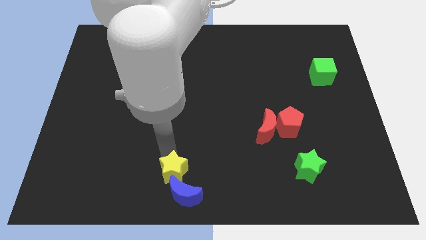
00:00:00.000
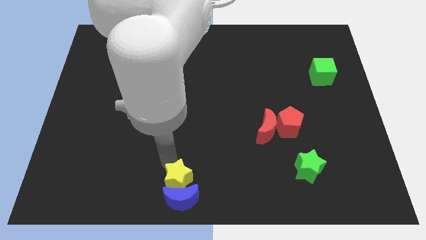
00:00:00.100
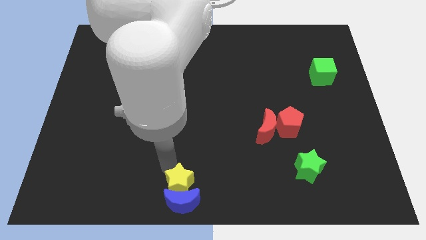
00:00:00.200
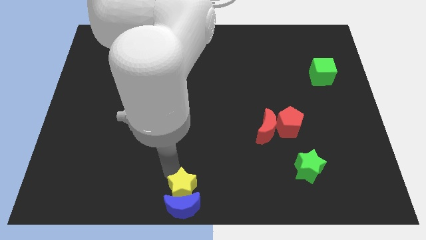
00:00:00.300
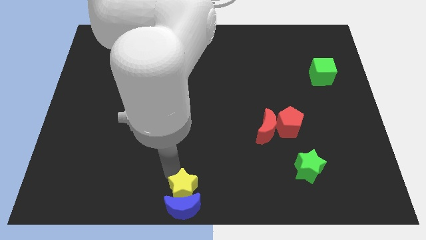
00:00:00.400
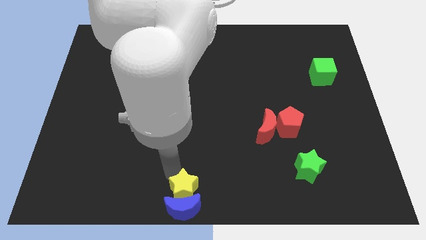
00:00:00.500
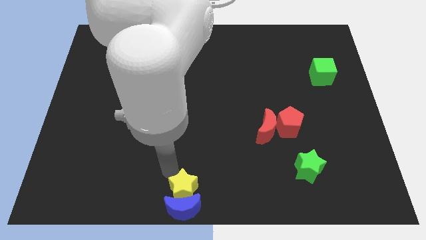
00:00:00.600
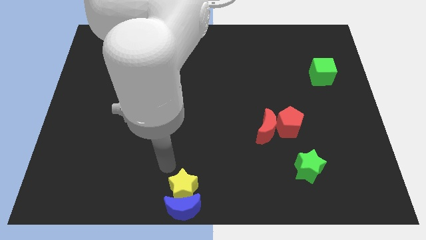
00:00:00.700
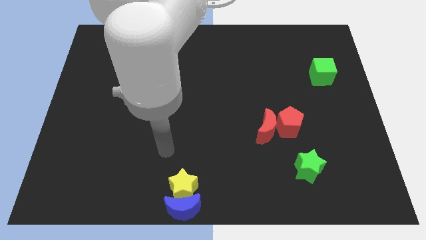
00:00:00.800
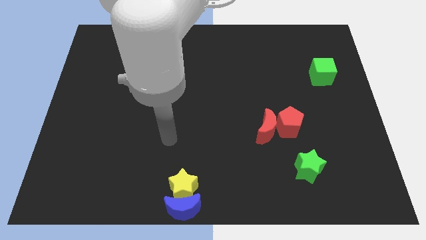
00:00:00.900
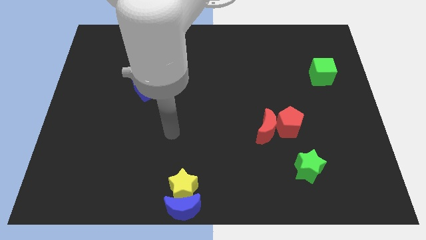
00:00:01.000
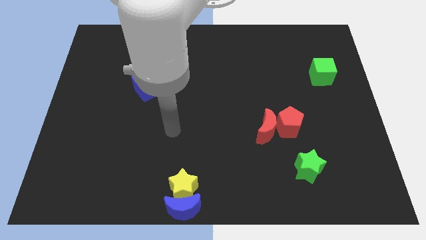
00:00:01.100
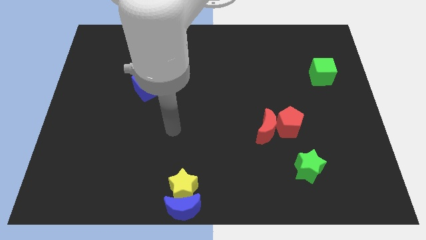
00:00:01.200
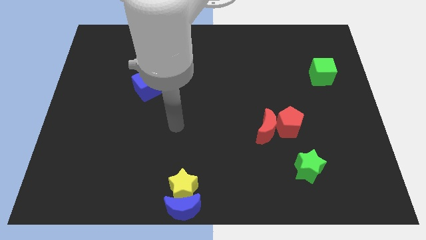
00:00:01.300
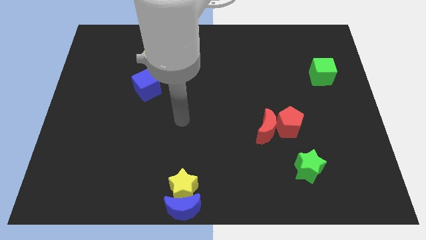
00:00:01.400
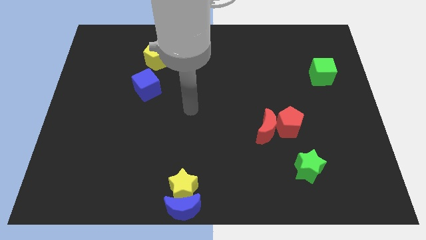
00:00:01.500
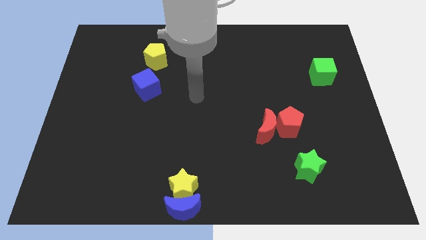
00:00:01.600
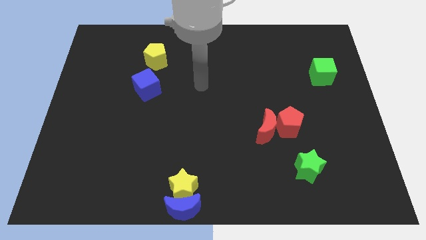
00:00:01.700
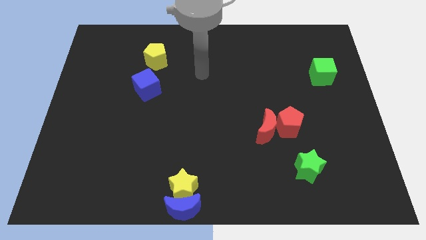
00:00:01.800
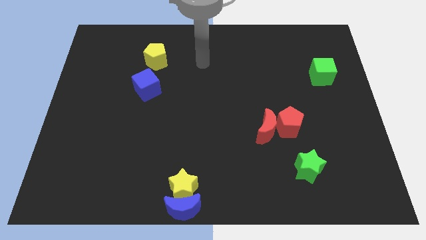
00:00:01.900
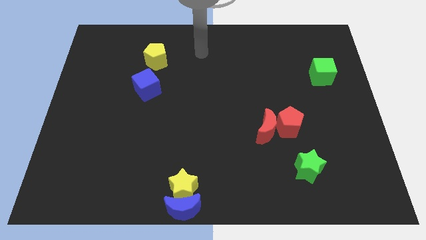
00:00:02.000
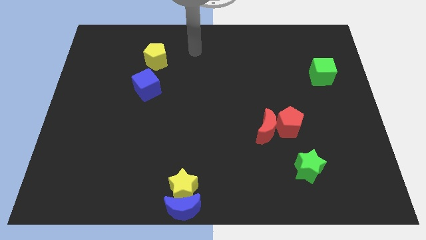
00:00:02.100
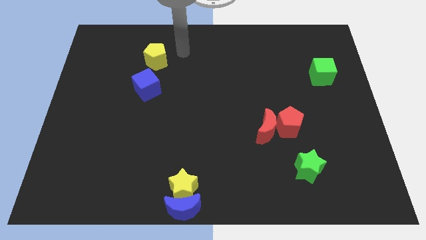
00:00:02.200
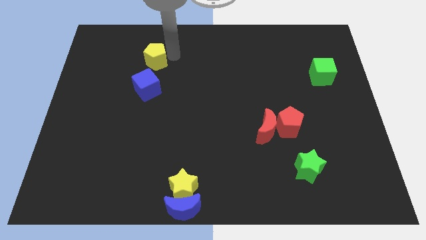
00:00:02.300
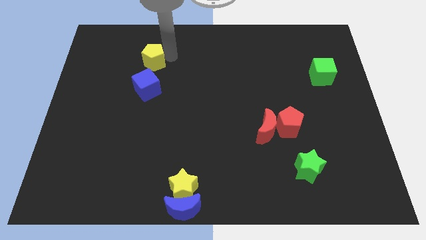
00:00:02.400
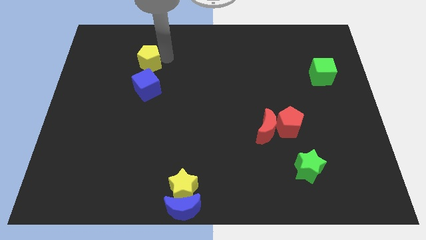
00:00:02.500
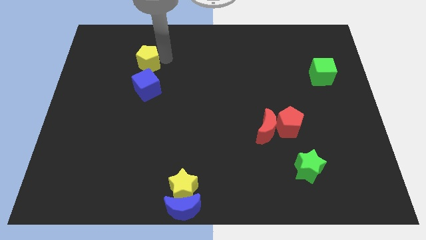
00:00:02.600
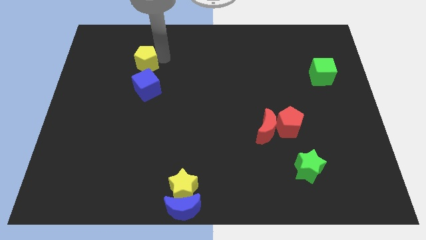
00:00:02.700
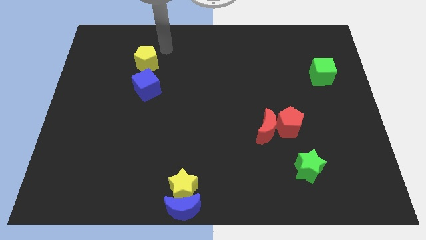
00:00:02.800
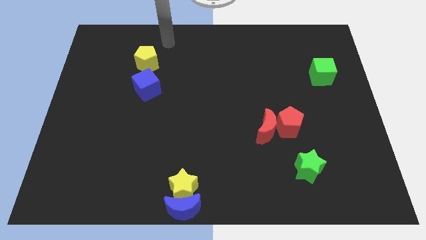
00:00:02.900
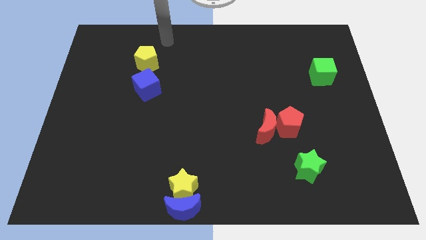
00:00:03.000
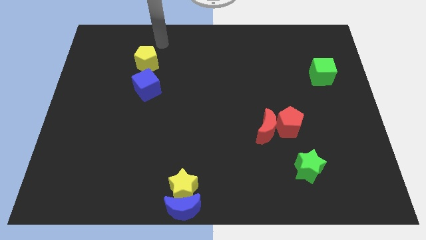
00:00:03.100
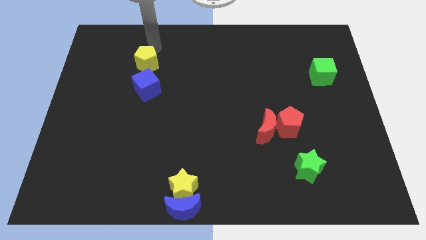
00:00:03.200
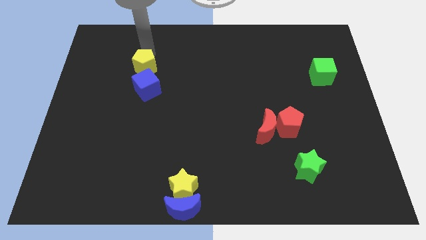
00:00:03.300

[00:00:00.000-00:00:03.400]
push the blue crescent using the yellow star to the bottom center

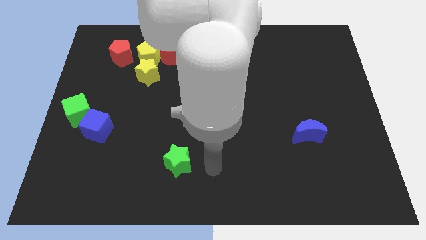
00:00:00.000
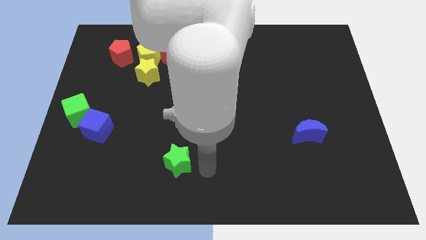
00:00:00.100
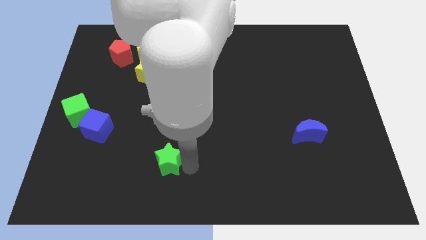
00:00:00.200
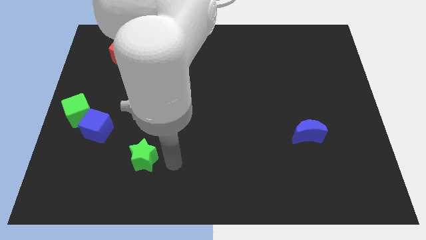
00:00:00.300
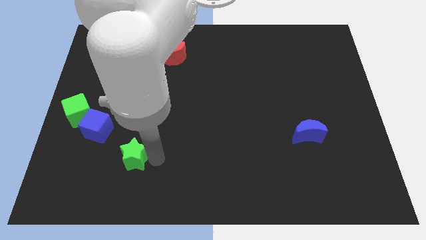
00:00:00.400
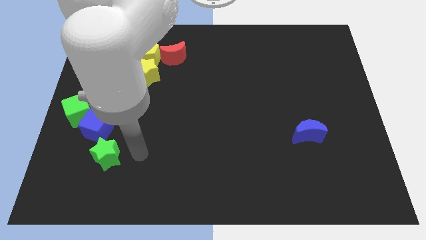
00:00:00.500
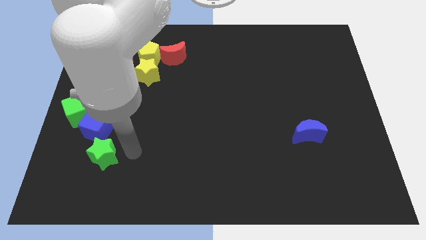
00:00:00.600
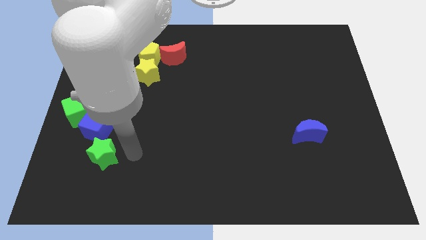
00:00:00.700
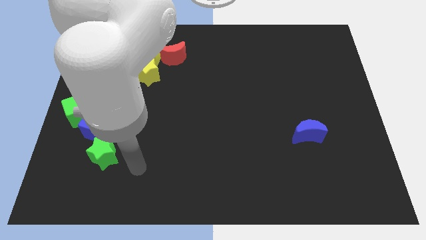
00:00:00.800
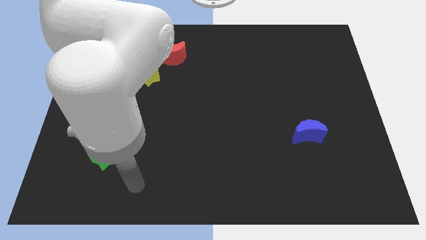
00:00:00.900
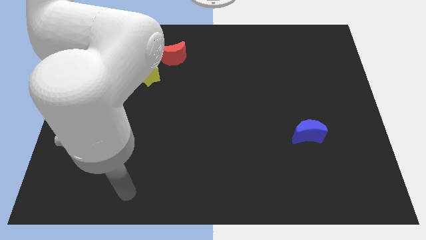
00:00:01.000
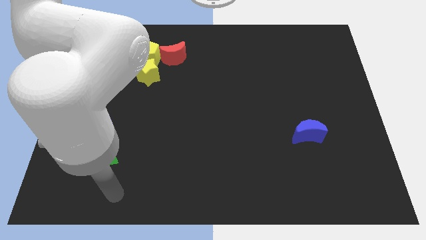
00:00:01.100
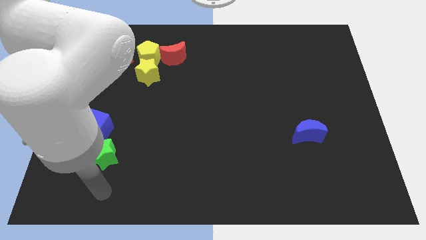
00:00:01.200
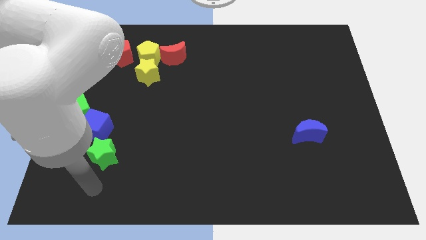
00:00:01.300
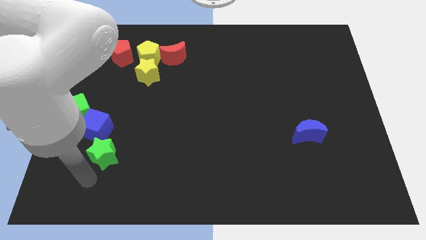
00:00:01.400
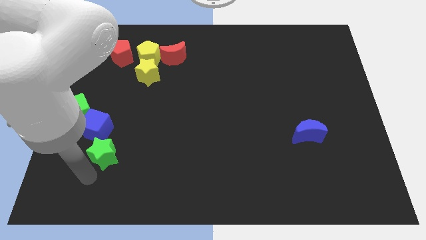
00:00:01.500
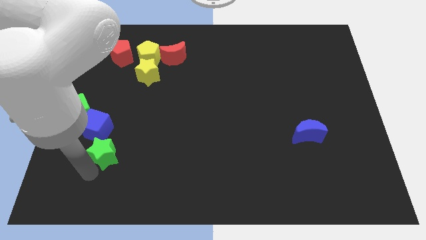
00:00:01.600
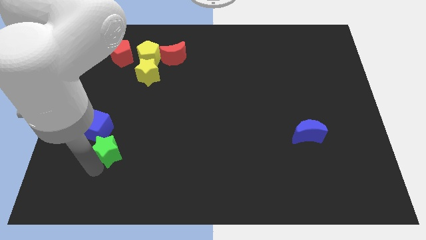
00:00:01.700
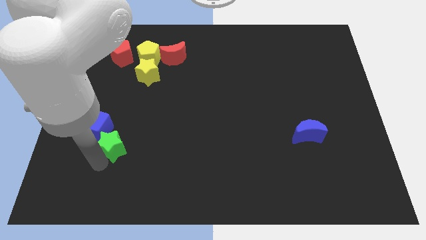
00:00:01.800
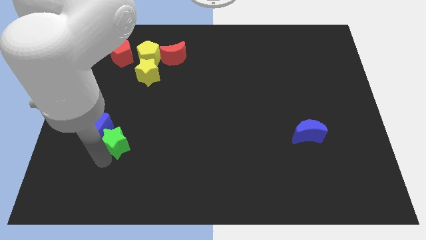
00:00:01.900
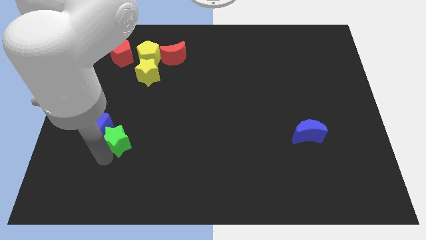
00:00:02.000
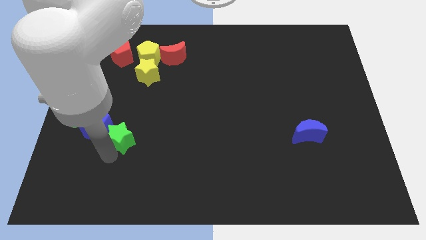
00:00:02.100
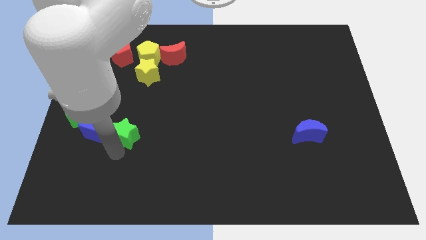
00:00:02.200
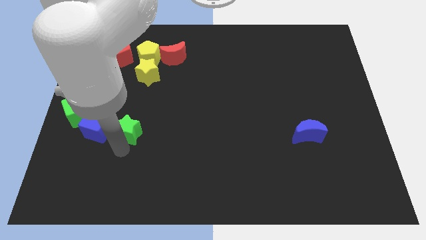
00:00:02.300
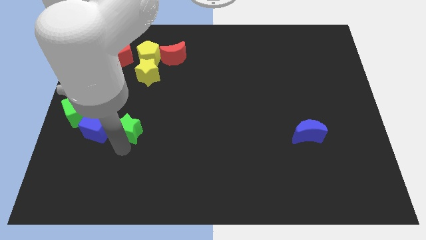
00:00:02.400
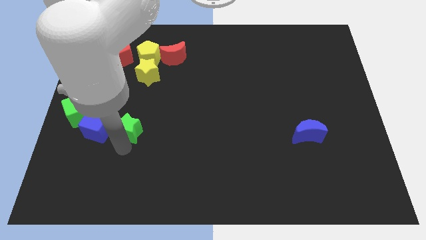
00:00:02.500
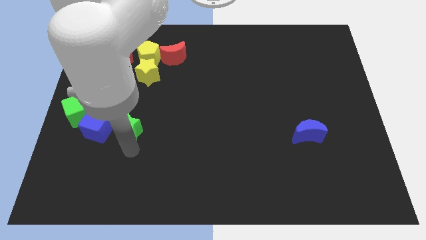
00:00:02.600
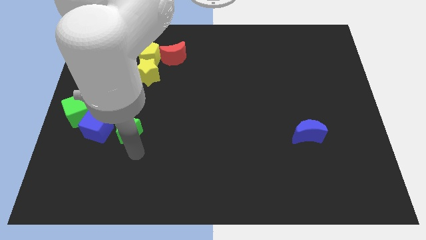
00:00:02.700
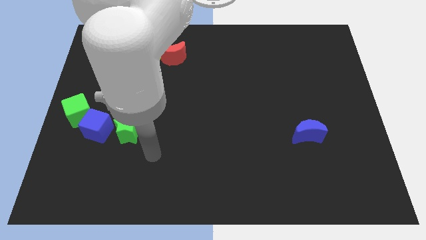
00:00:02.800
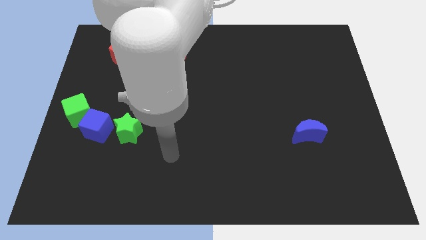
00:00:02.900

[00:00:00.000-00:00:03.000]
place the green star right to the blue cube

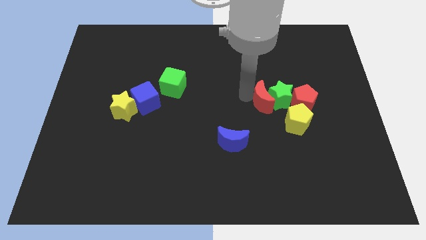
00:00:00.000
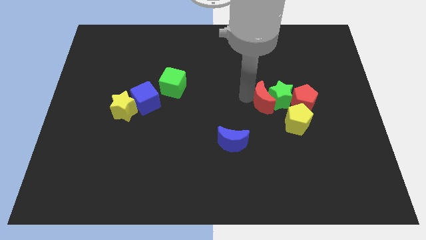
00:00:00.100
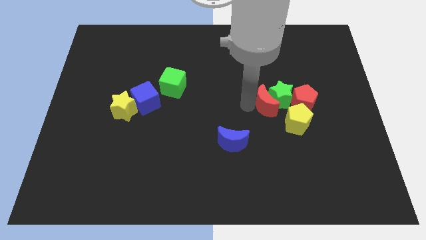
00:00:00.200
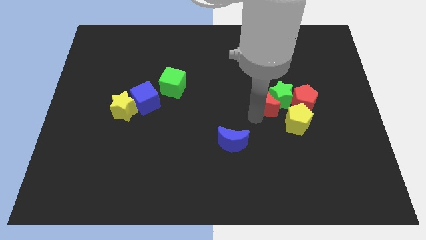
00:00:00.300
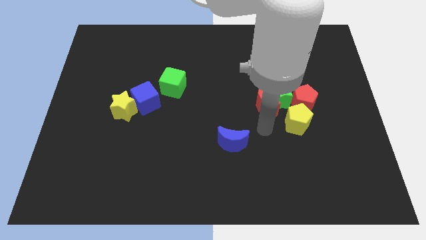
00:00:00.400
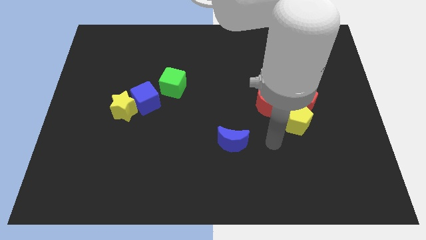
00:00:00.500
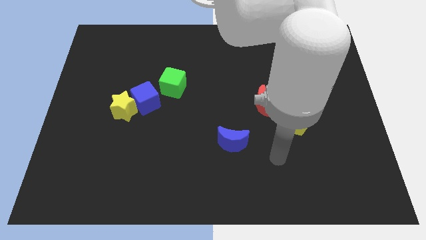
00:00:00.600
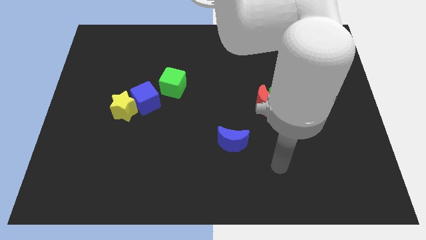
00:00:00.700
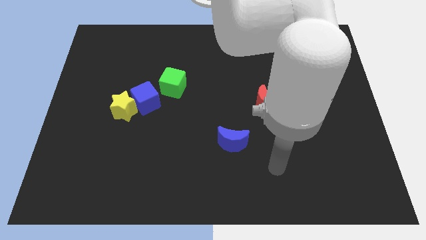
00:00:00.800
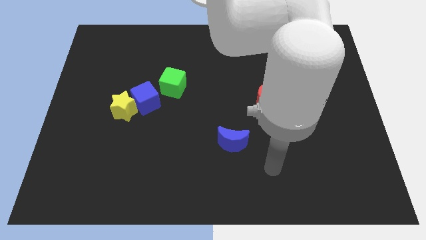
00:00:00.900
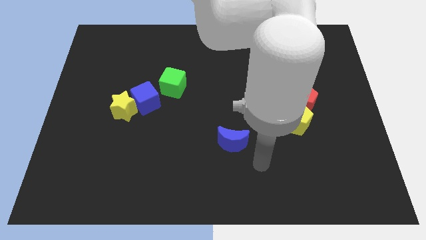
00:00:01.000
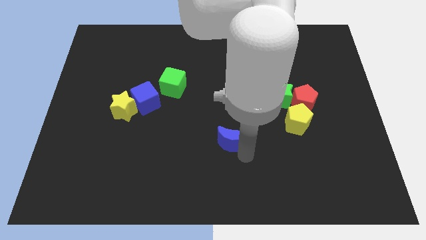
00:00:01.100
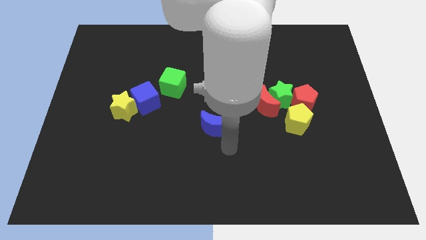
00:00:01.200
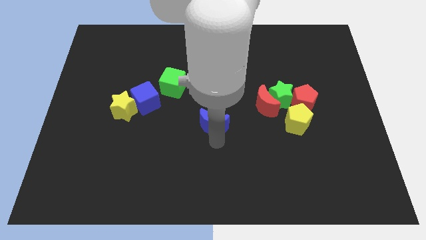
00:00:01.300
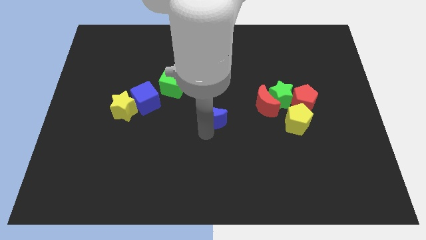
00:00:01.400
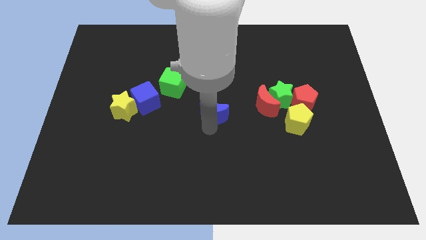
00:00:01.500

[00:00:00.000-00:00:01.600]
place the blue crescent towards the center of the board

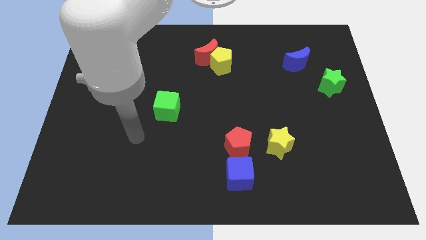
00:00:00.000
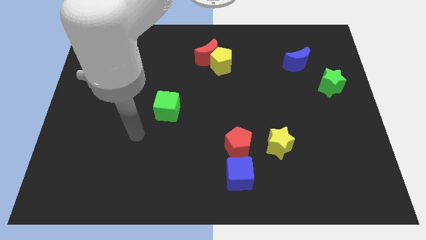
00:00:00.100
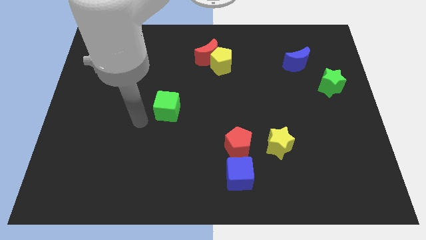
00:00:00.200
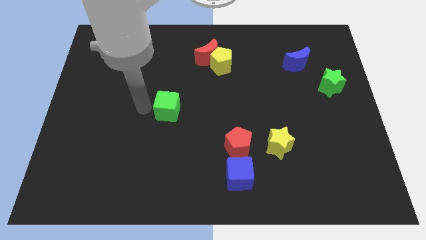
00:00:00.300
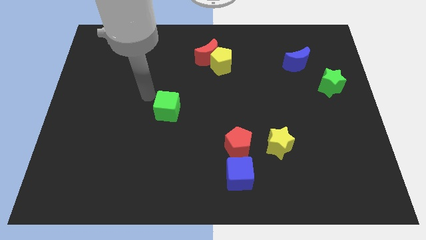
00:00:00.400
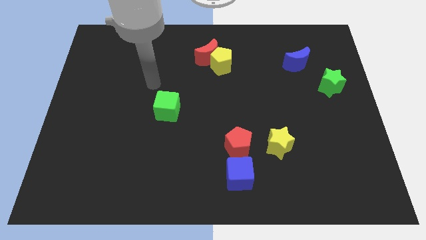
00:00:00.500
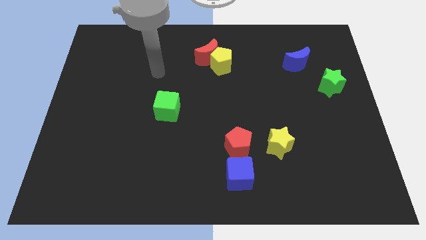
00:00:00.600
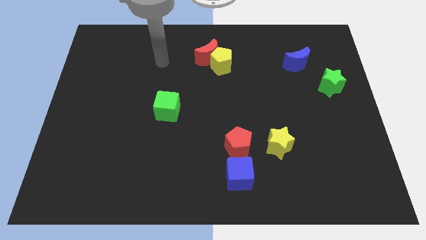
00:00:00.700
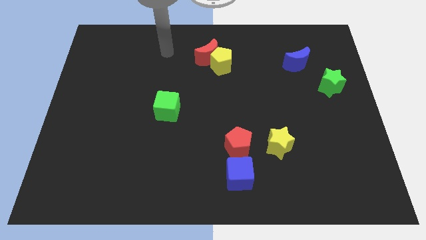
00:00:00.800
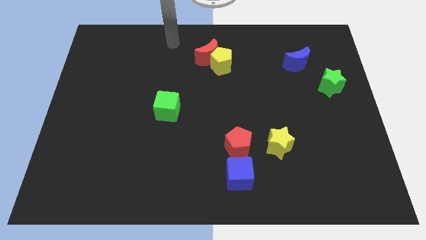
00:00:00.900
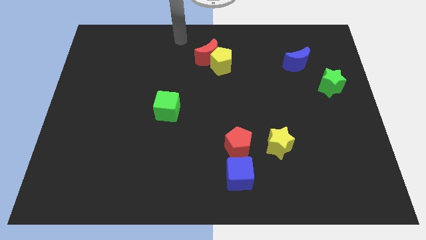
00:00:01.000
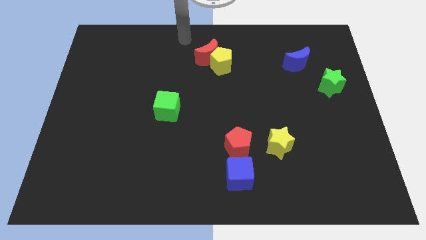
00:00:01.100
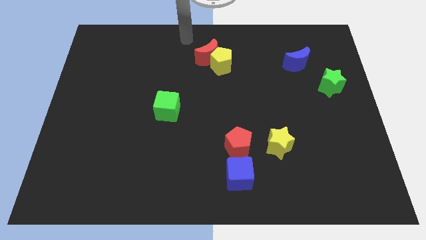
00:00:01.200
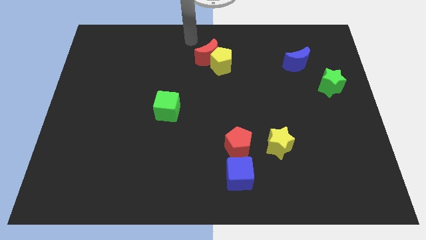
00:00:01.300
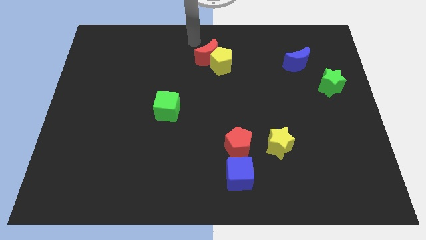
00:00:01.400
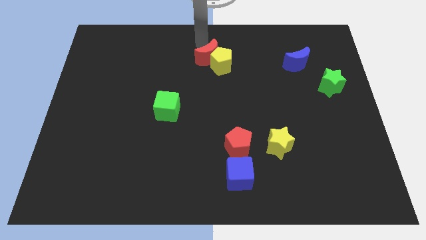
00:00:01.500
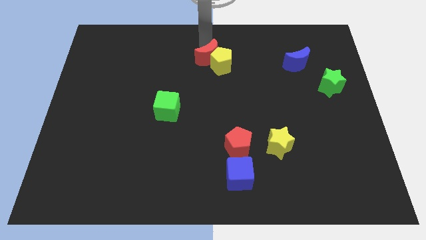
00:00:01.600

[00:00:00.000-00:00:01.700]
put your arm at the top of the red moon
